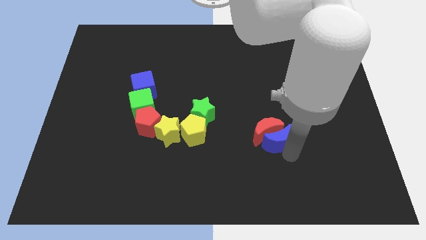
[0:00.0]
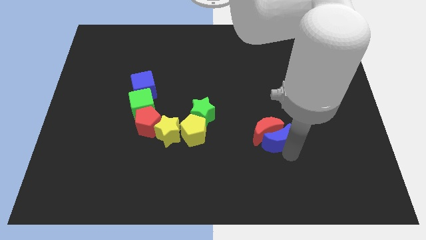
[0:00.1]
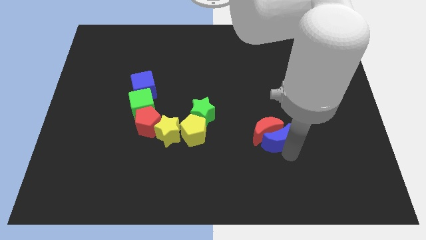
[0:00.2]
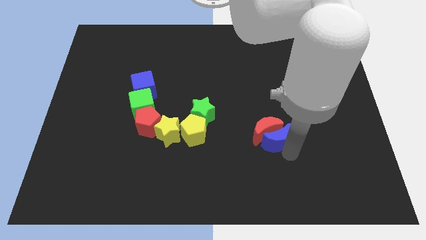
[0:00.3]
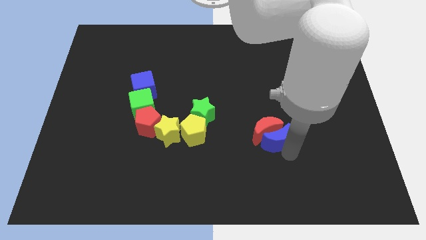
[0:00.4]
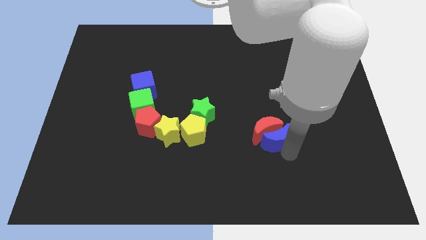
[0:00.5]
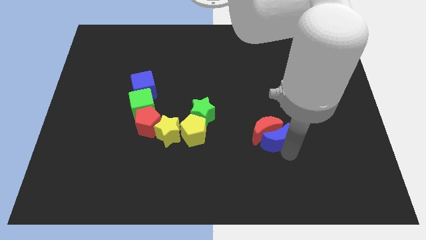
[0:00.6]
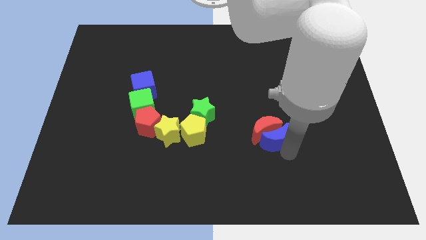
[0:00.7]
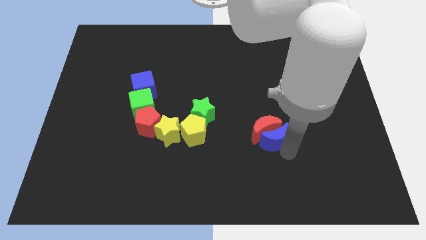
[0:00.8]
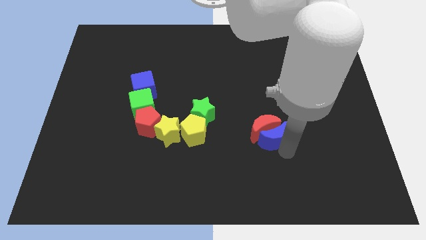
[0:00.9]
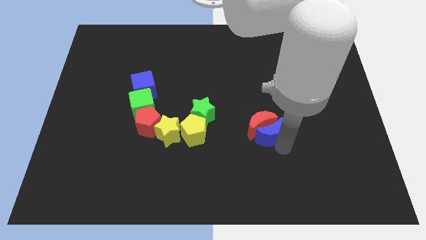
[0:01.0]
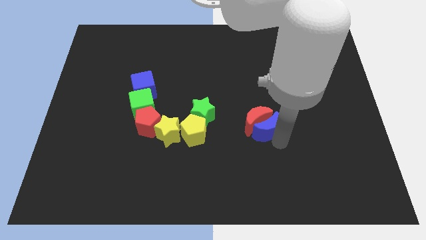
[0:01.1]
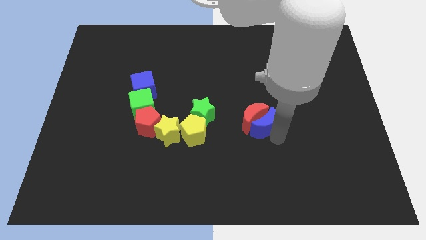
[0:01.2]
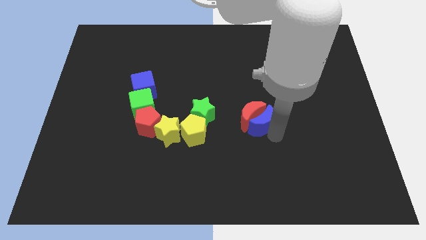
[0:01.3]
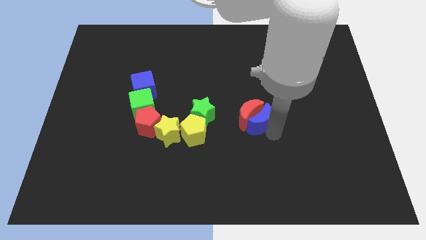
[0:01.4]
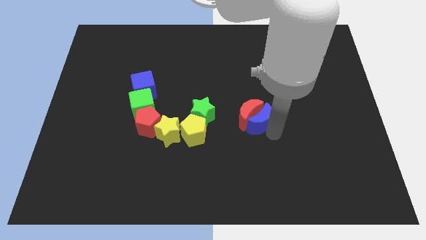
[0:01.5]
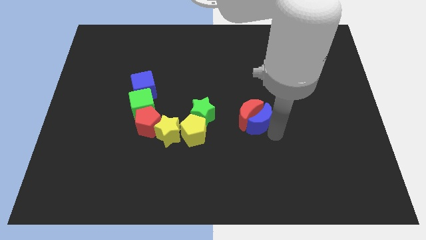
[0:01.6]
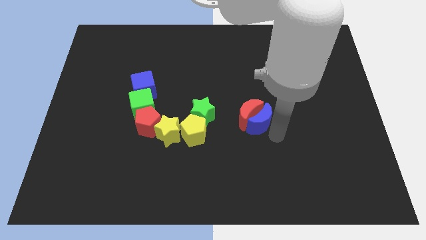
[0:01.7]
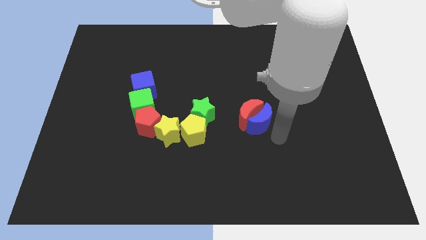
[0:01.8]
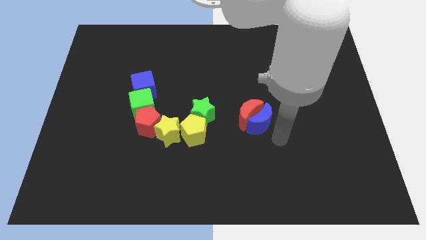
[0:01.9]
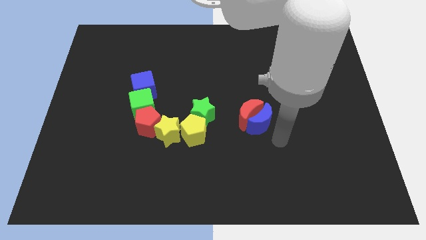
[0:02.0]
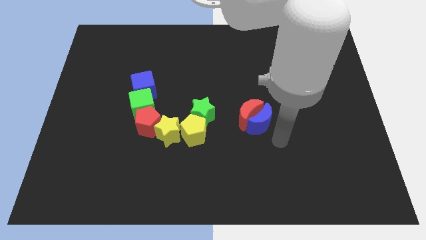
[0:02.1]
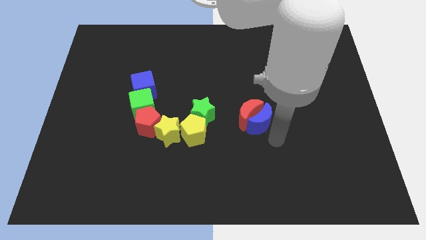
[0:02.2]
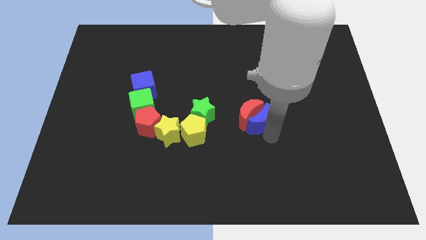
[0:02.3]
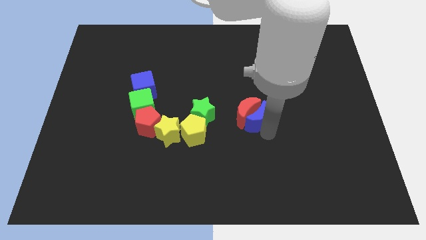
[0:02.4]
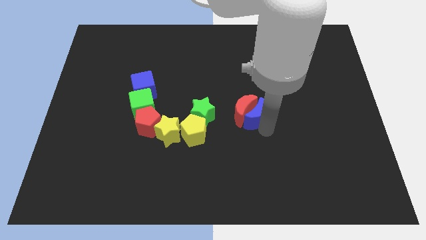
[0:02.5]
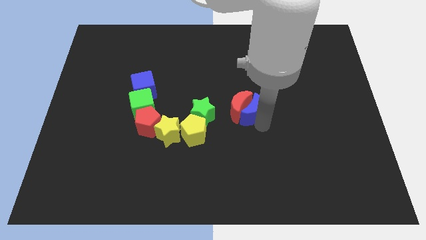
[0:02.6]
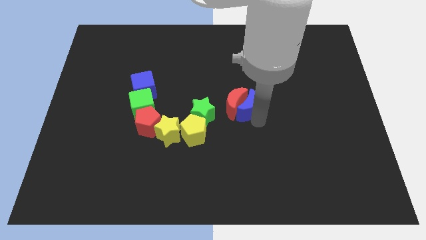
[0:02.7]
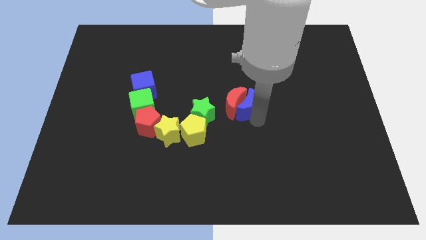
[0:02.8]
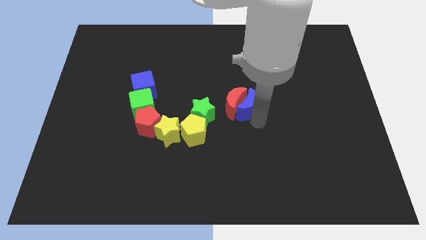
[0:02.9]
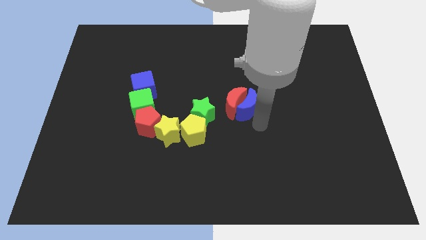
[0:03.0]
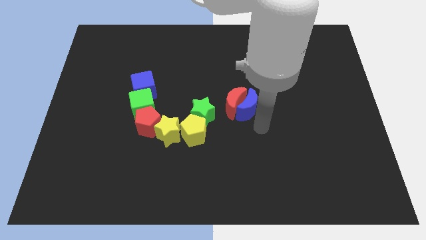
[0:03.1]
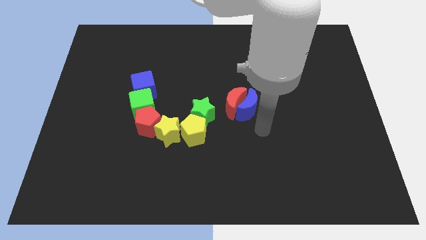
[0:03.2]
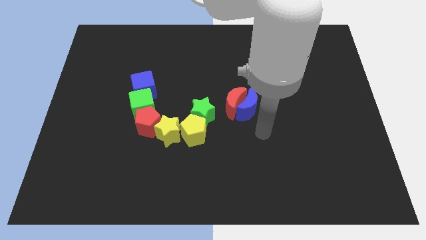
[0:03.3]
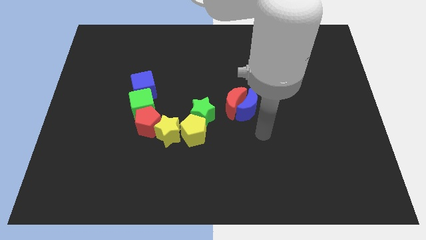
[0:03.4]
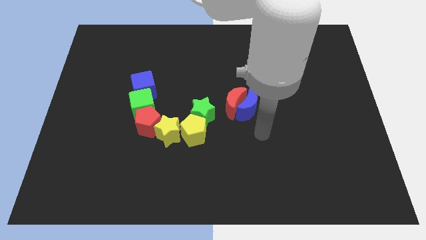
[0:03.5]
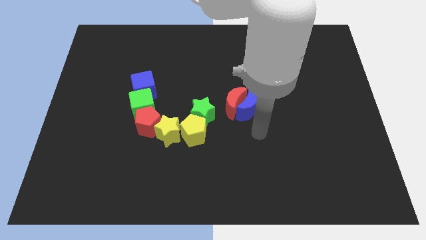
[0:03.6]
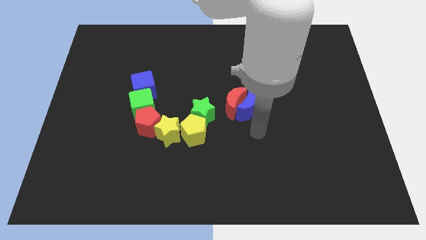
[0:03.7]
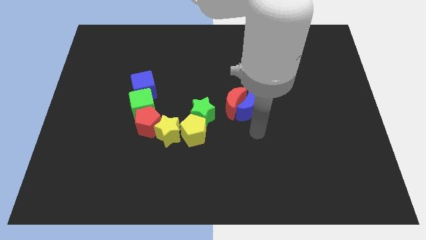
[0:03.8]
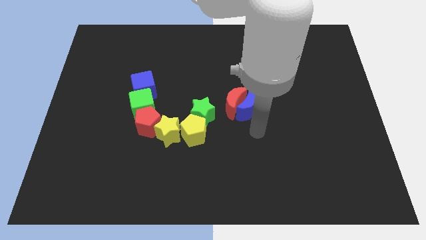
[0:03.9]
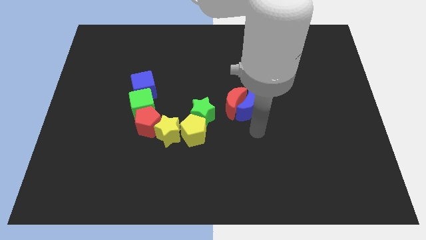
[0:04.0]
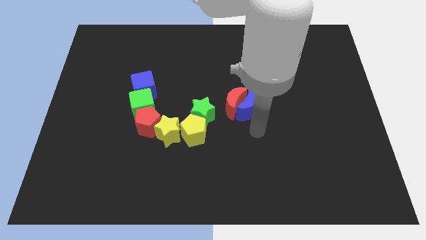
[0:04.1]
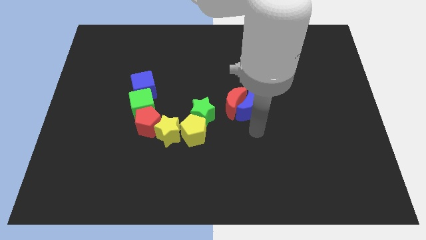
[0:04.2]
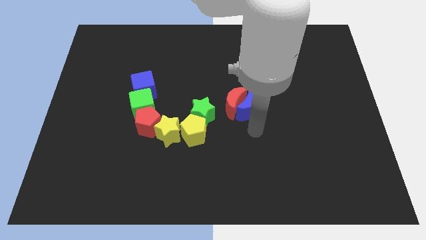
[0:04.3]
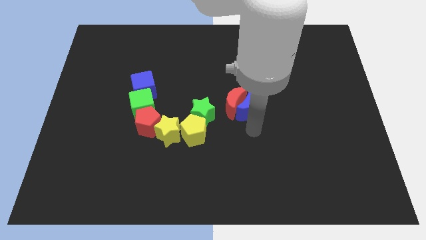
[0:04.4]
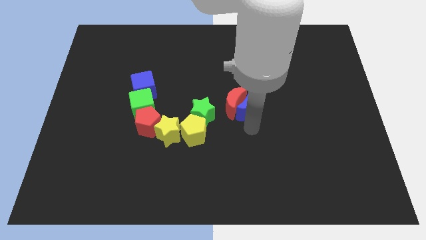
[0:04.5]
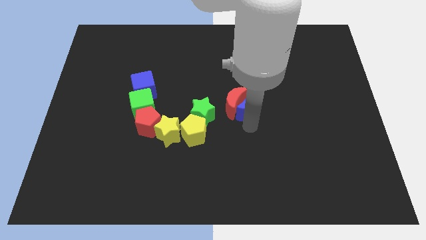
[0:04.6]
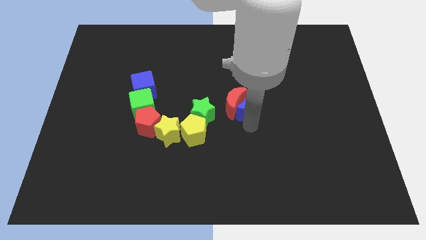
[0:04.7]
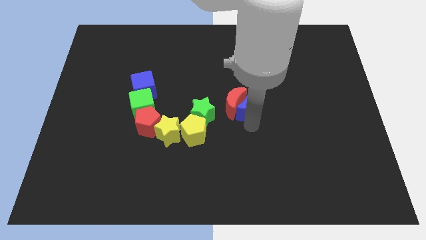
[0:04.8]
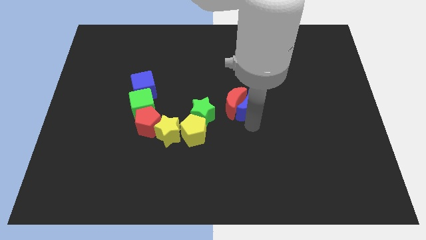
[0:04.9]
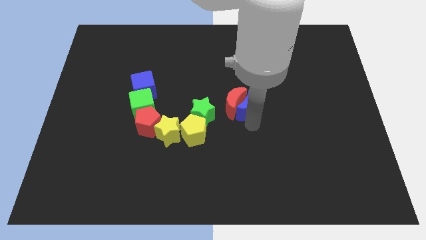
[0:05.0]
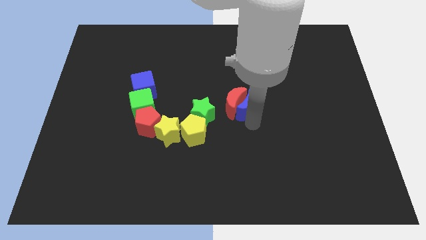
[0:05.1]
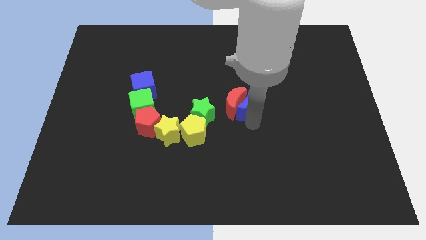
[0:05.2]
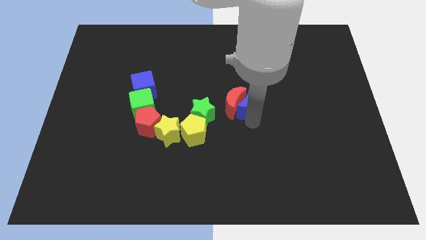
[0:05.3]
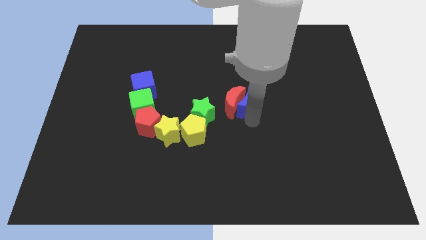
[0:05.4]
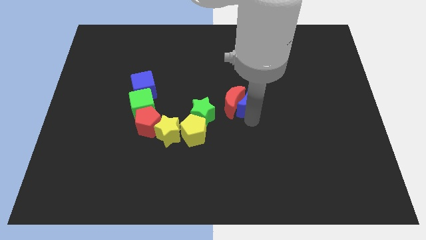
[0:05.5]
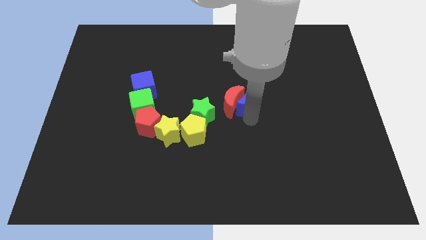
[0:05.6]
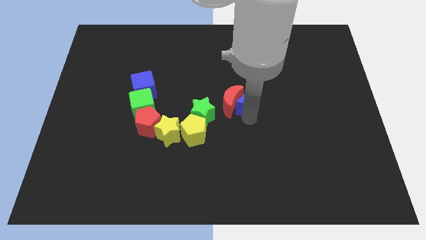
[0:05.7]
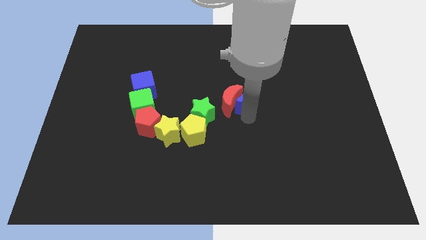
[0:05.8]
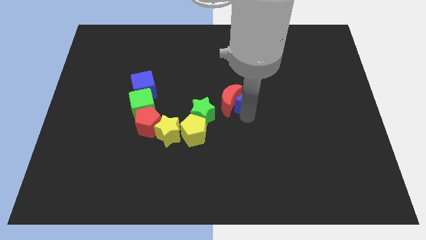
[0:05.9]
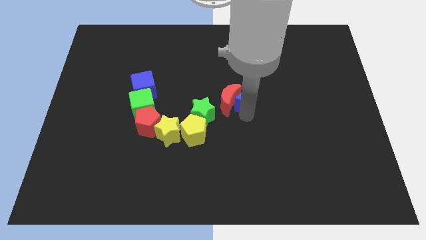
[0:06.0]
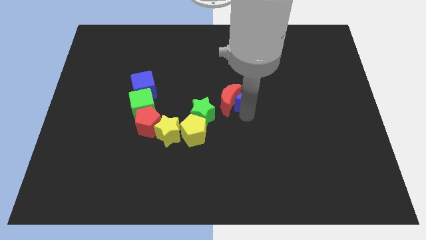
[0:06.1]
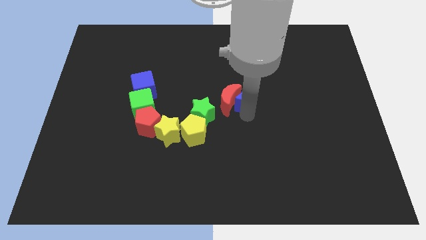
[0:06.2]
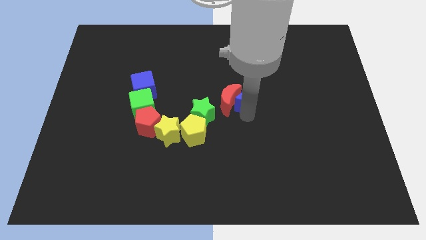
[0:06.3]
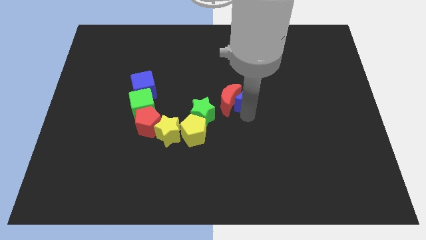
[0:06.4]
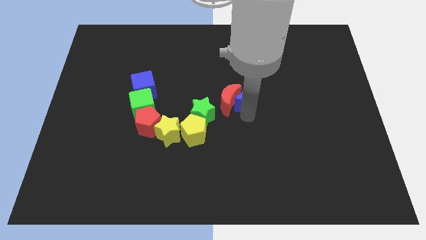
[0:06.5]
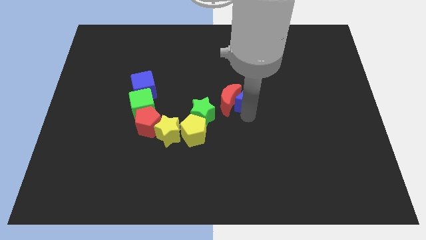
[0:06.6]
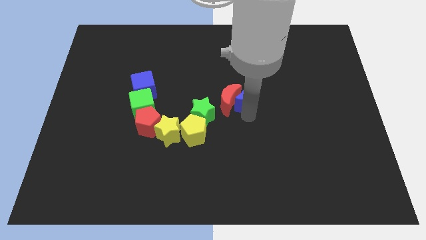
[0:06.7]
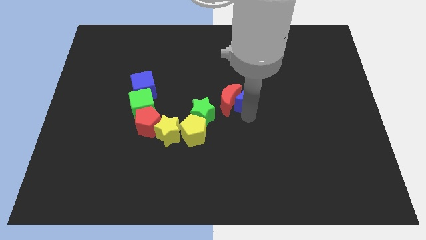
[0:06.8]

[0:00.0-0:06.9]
slightly push the red crescent to the center of the board using the blue crescent

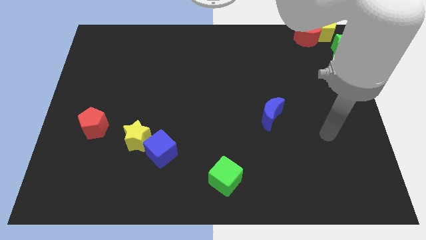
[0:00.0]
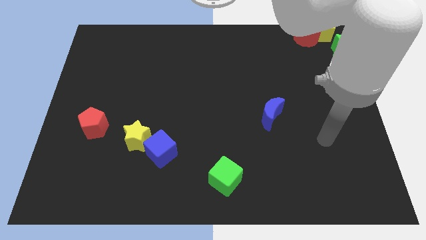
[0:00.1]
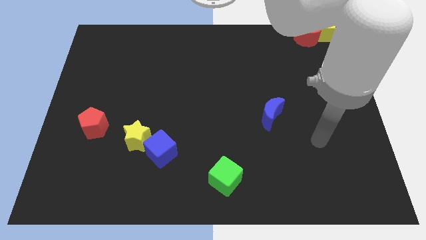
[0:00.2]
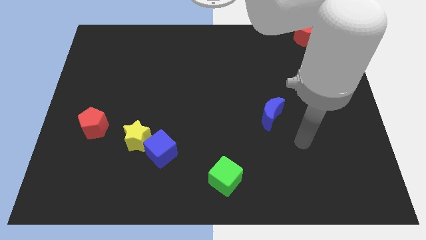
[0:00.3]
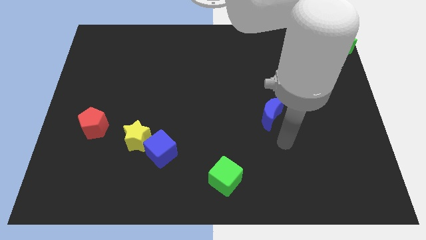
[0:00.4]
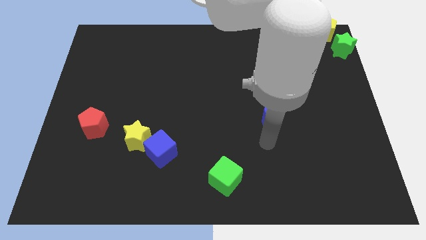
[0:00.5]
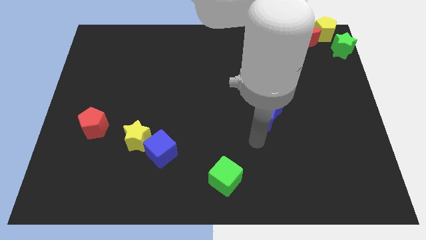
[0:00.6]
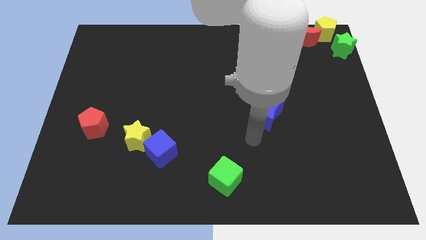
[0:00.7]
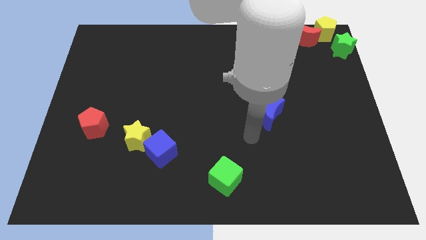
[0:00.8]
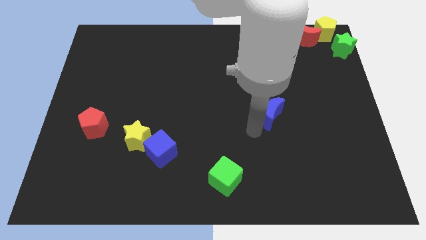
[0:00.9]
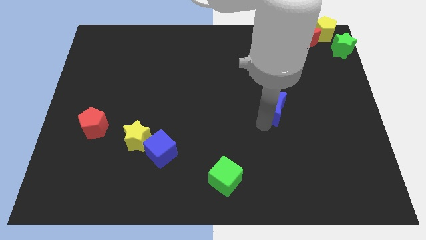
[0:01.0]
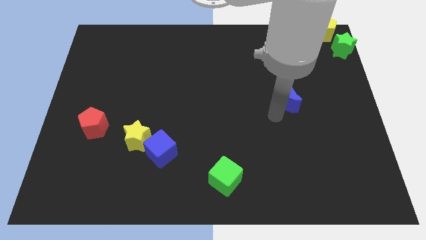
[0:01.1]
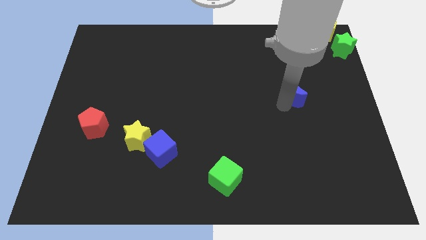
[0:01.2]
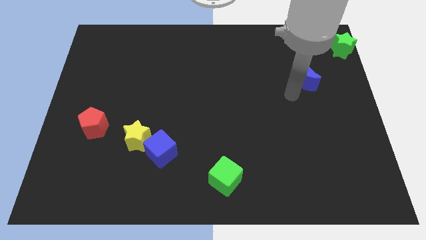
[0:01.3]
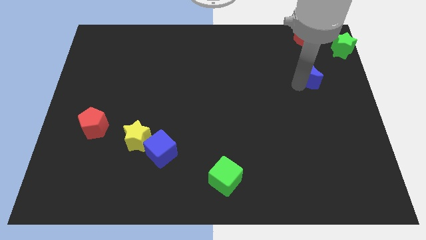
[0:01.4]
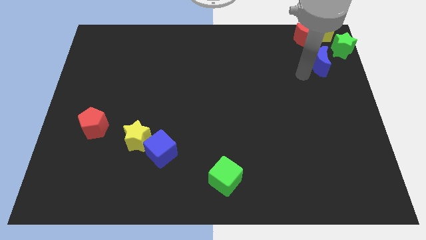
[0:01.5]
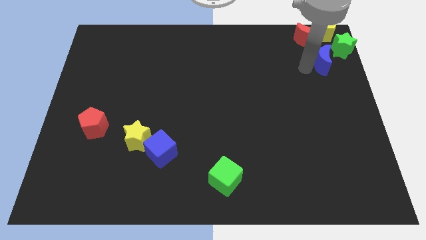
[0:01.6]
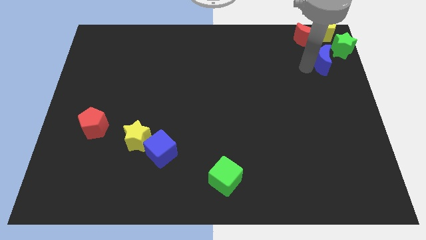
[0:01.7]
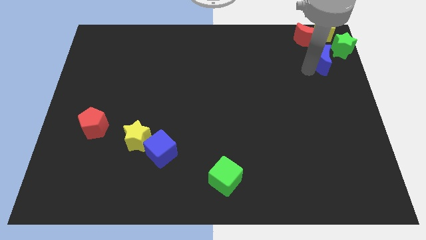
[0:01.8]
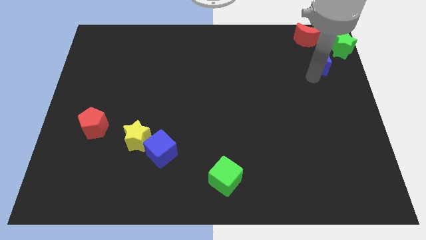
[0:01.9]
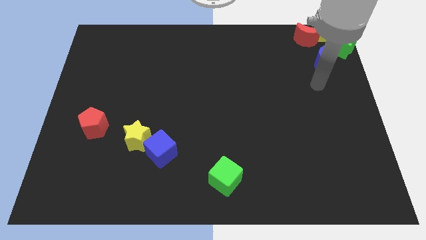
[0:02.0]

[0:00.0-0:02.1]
move blue moon into group of blocks below green star
